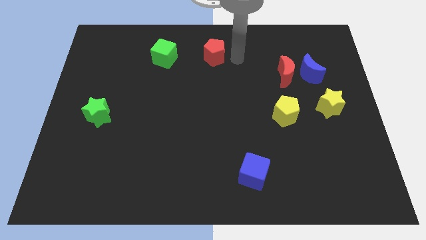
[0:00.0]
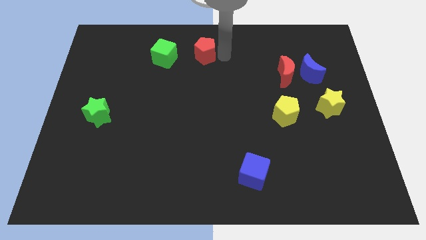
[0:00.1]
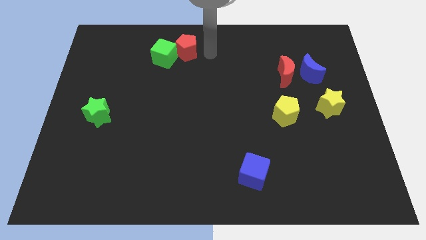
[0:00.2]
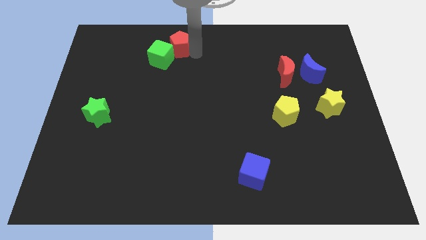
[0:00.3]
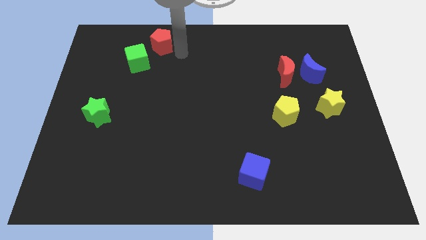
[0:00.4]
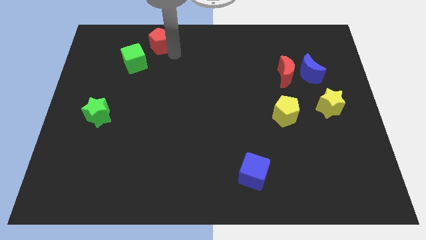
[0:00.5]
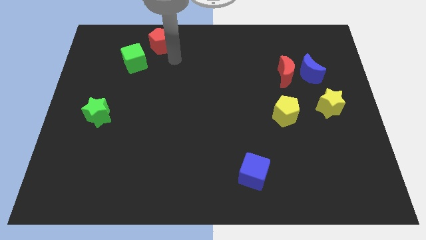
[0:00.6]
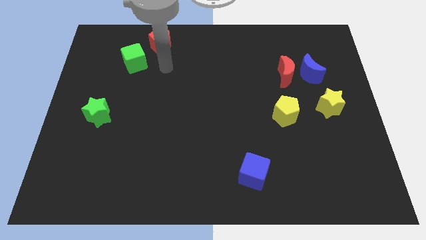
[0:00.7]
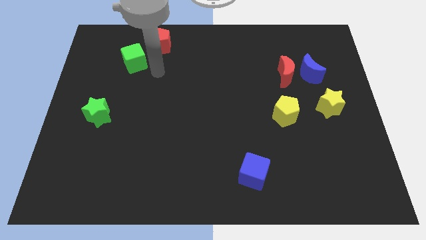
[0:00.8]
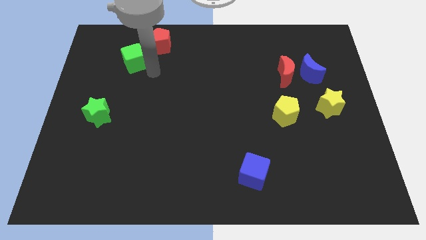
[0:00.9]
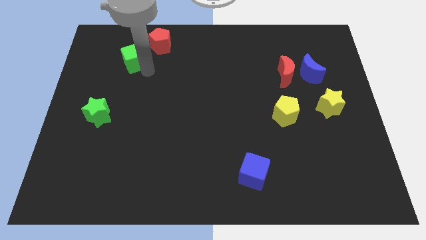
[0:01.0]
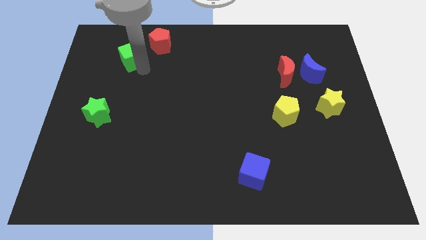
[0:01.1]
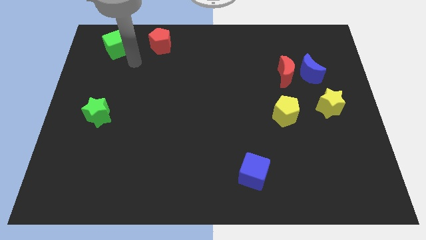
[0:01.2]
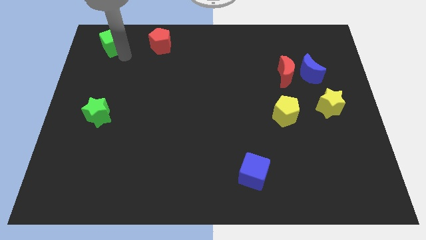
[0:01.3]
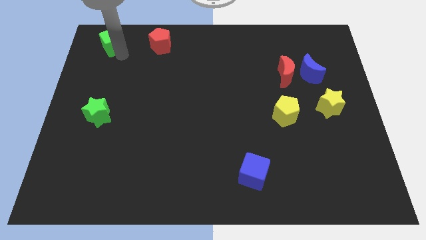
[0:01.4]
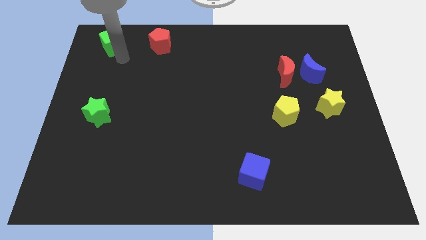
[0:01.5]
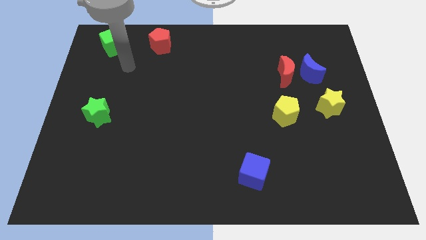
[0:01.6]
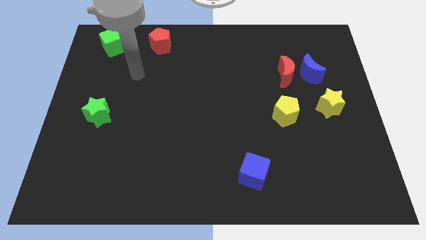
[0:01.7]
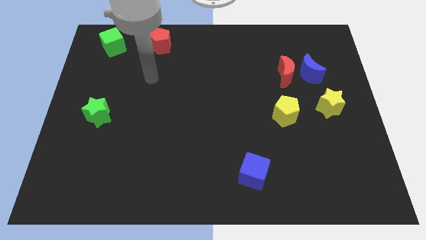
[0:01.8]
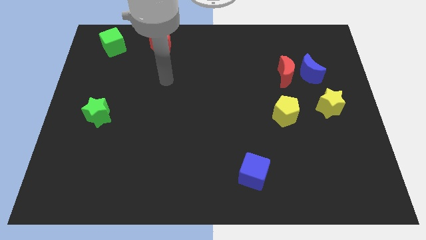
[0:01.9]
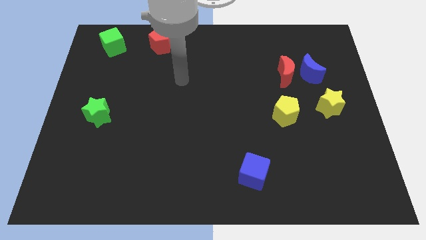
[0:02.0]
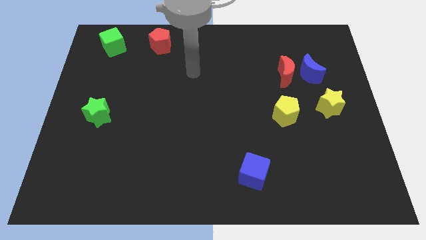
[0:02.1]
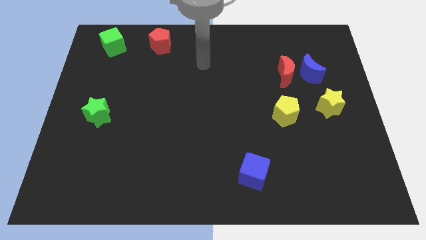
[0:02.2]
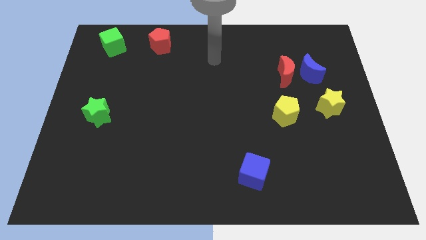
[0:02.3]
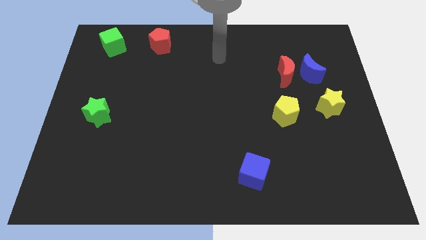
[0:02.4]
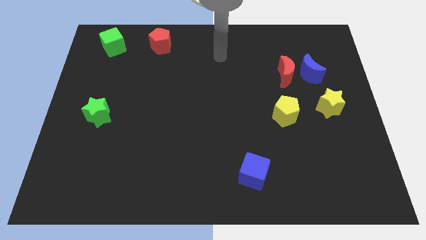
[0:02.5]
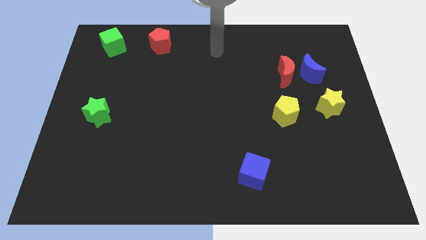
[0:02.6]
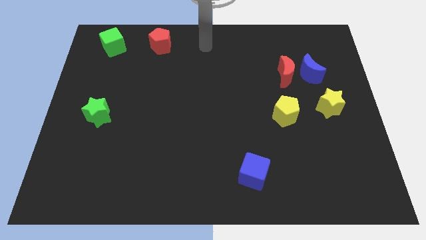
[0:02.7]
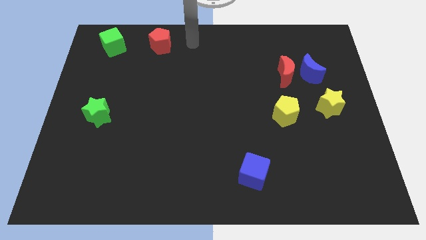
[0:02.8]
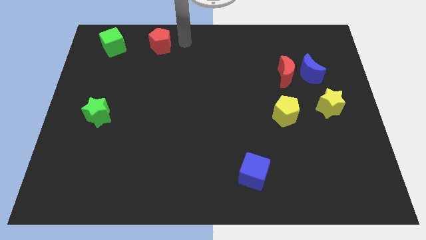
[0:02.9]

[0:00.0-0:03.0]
push the green cube towards the top left corner

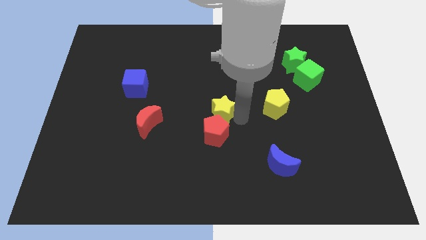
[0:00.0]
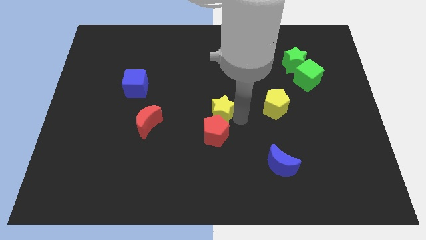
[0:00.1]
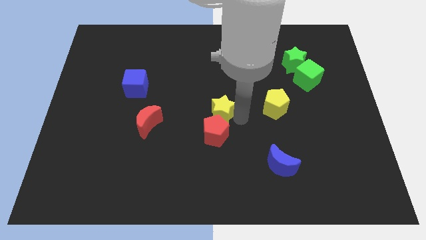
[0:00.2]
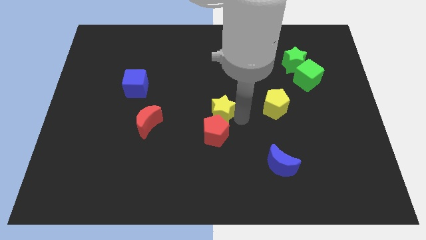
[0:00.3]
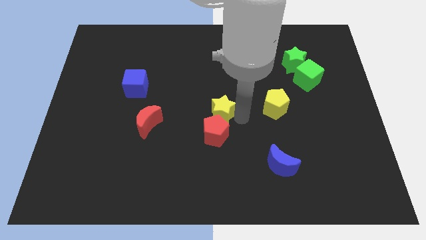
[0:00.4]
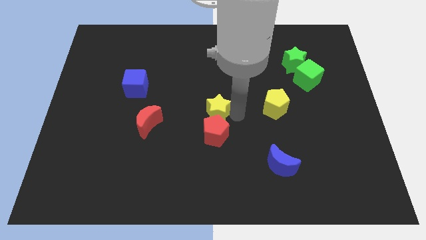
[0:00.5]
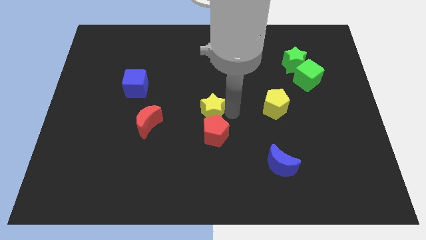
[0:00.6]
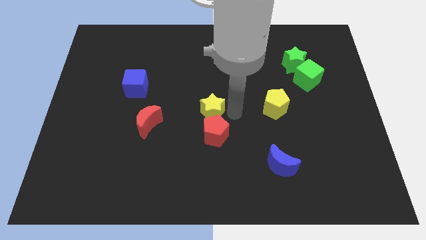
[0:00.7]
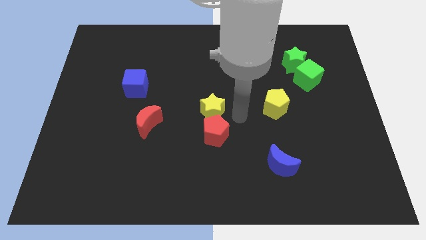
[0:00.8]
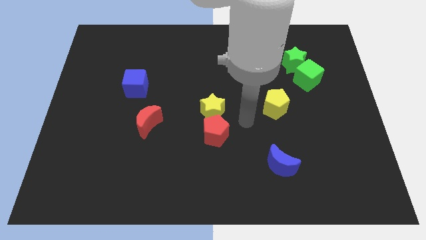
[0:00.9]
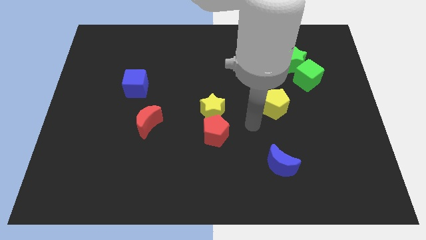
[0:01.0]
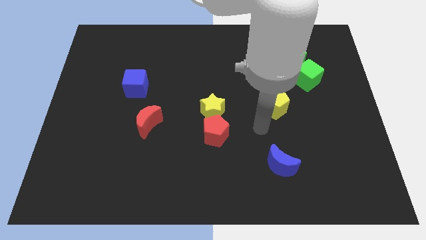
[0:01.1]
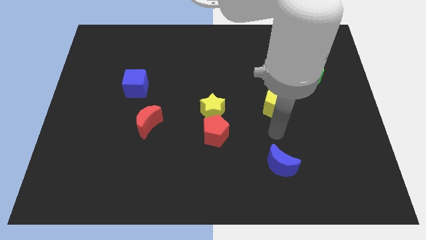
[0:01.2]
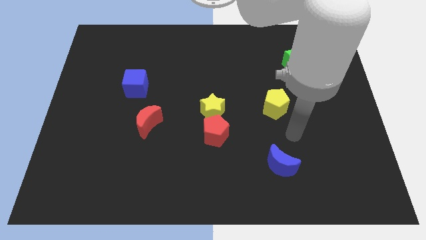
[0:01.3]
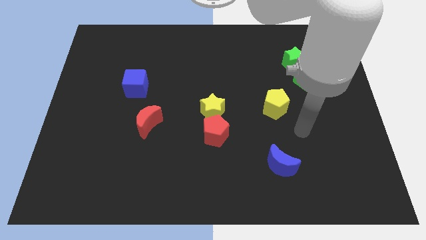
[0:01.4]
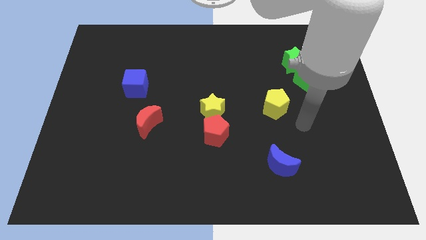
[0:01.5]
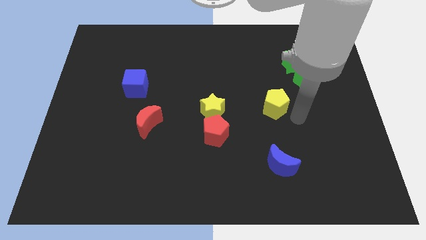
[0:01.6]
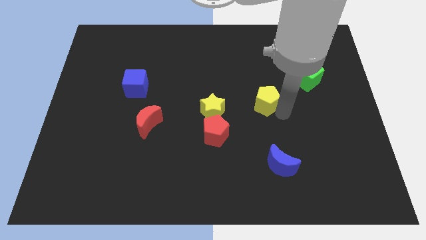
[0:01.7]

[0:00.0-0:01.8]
push the yellow star to the center of the board

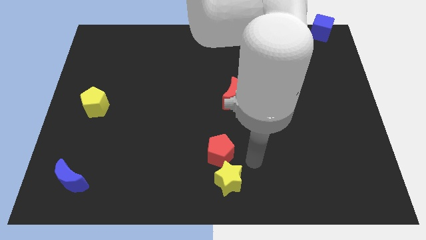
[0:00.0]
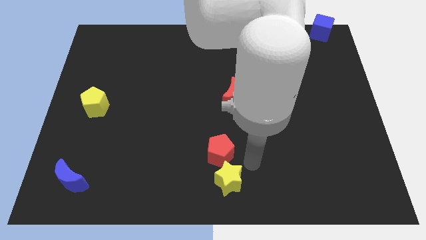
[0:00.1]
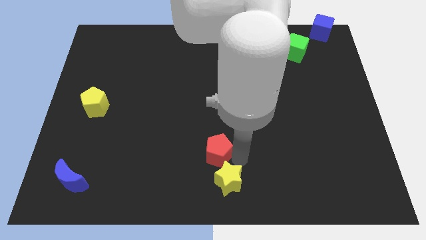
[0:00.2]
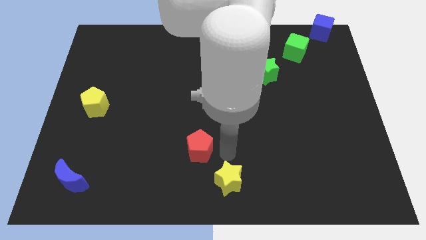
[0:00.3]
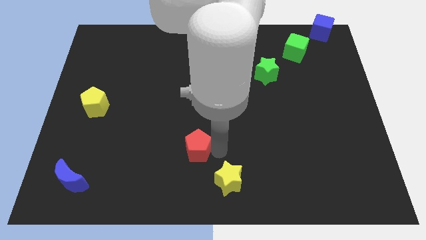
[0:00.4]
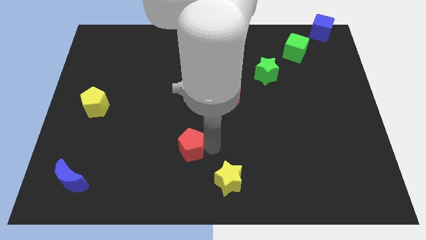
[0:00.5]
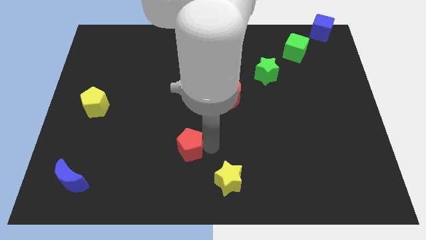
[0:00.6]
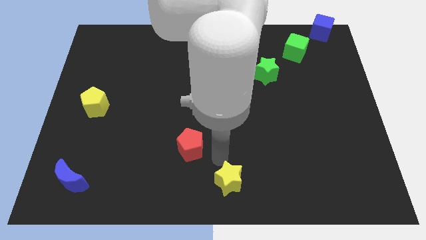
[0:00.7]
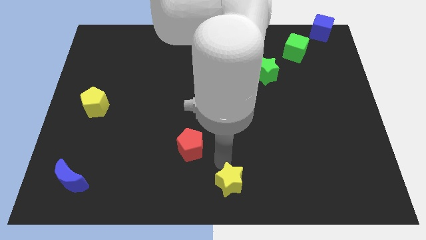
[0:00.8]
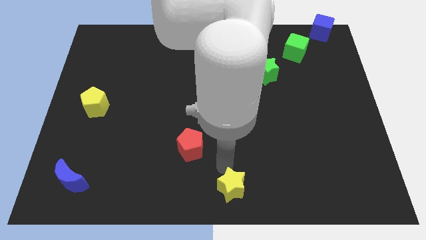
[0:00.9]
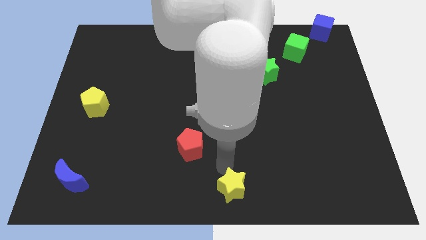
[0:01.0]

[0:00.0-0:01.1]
move the red pentagon away from the yellow star

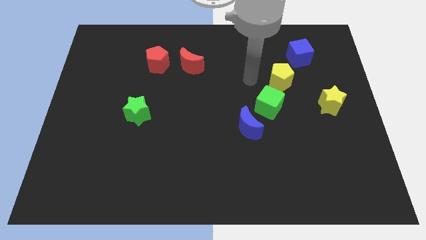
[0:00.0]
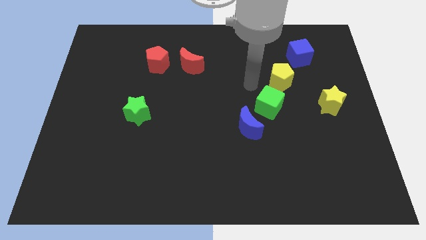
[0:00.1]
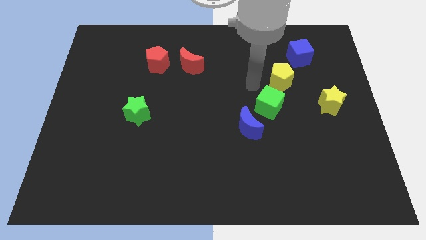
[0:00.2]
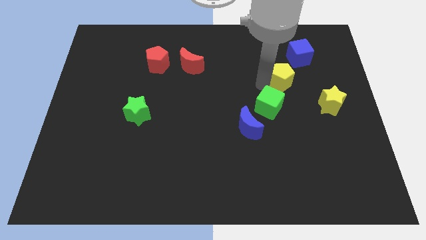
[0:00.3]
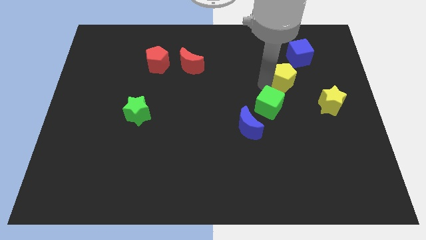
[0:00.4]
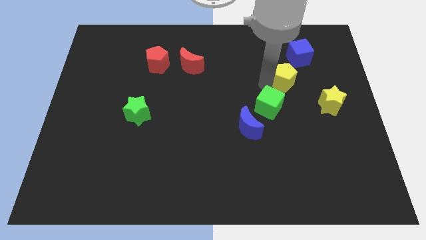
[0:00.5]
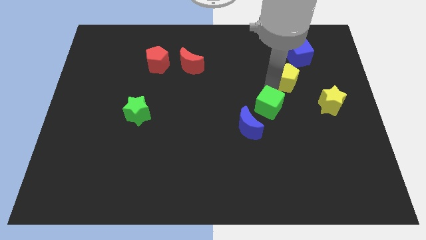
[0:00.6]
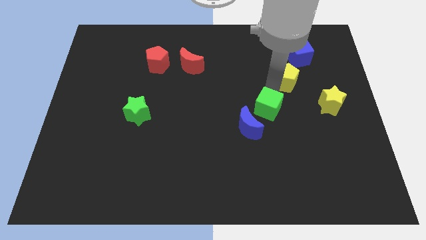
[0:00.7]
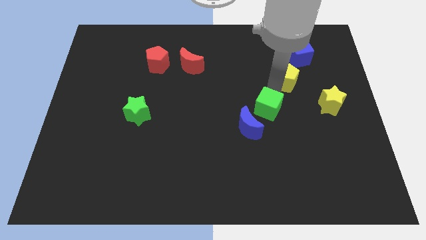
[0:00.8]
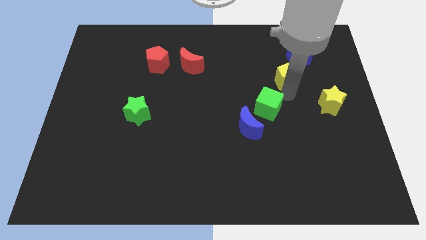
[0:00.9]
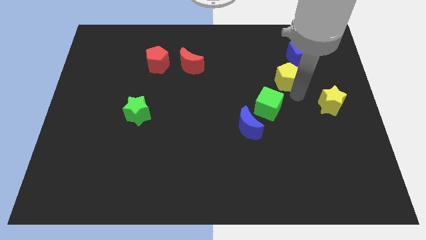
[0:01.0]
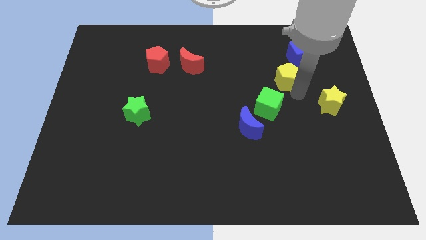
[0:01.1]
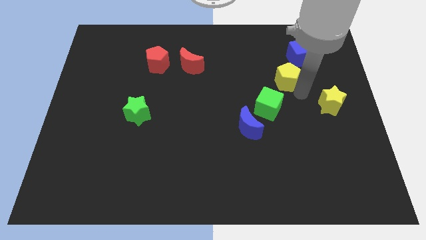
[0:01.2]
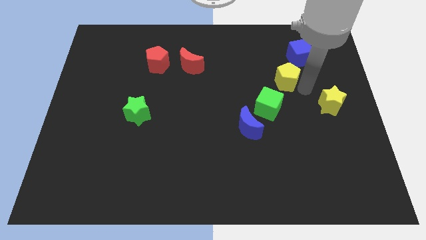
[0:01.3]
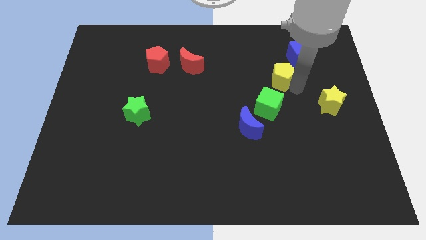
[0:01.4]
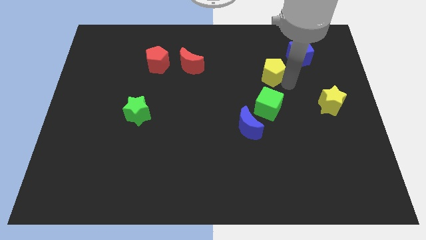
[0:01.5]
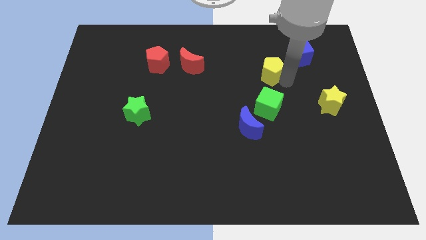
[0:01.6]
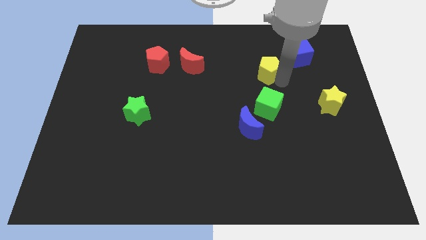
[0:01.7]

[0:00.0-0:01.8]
separate green cube and the yellow pentagon

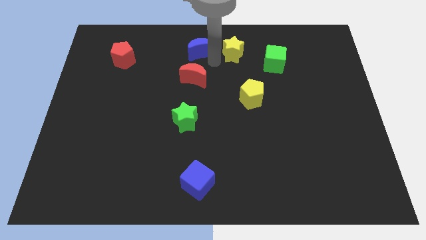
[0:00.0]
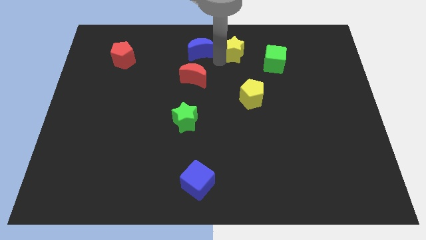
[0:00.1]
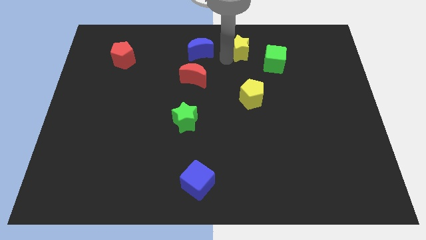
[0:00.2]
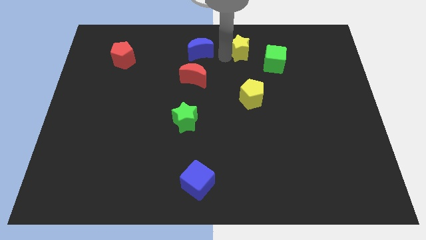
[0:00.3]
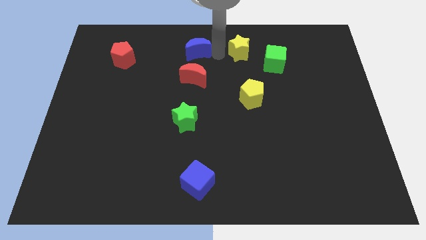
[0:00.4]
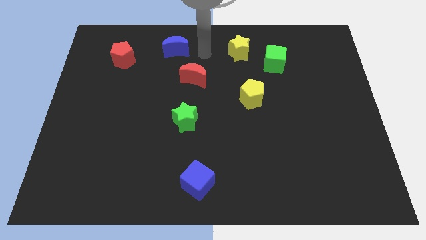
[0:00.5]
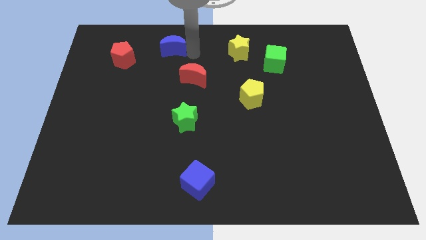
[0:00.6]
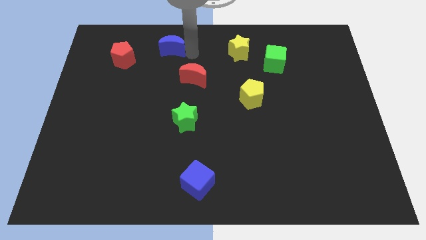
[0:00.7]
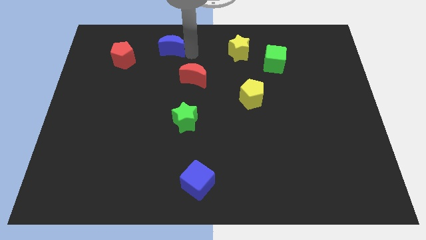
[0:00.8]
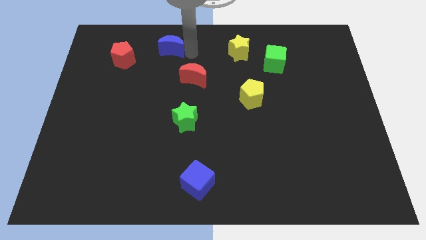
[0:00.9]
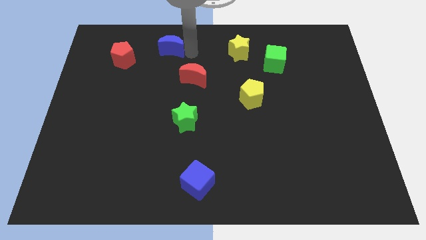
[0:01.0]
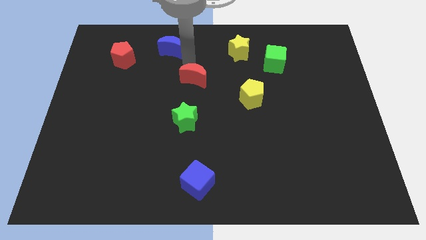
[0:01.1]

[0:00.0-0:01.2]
push the blue moon towards the red pentagon

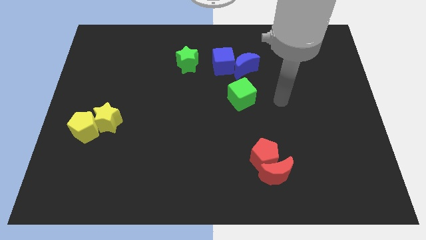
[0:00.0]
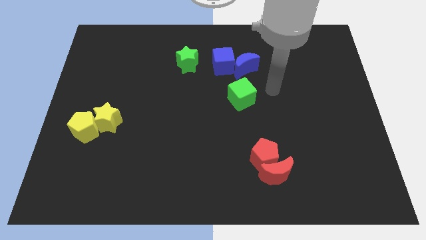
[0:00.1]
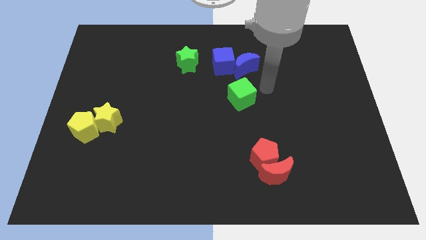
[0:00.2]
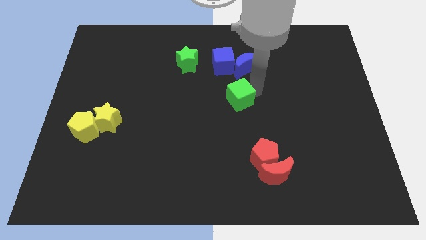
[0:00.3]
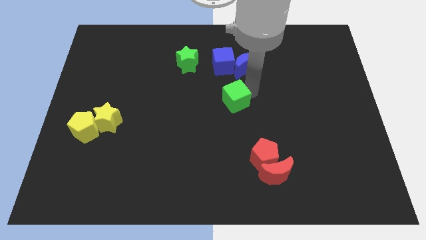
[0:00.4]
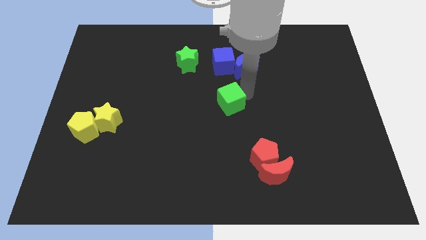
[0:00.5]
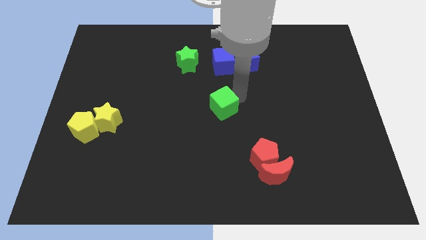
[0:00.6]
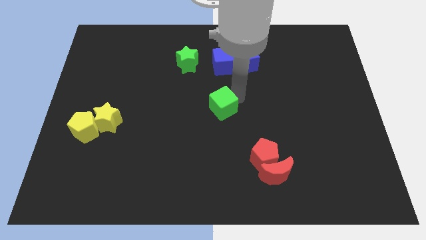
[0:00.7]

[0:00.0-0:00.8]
push green cube below blue cube
